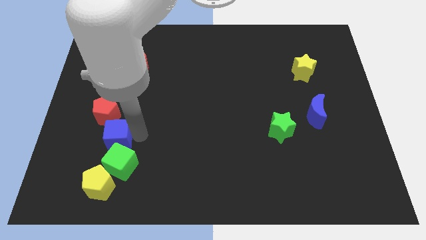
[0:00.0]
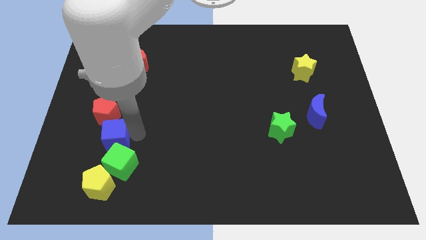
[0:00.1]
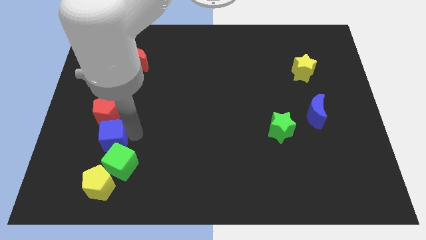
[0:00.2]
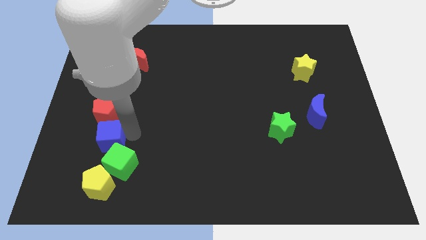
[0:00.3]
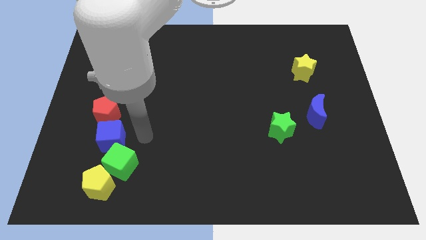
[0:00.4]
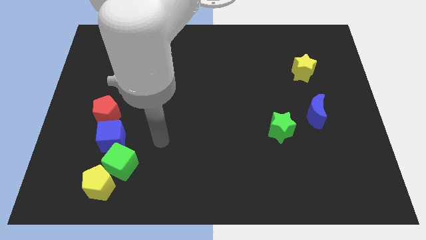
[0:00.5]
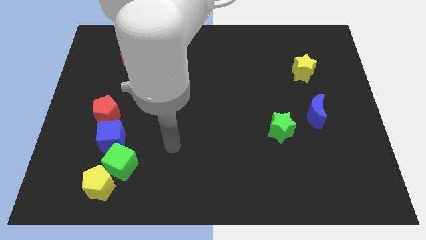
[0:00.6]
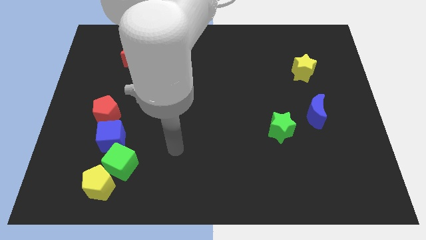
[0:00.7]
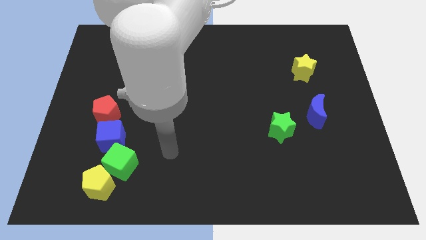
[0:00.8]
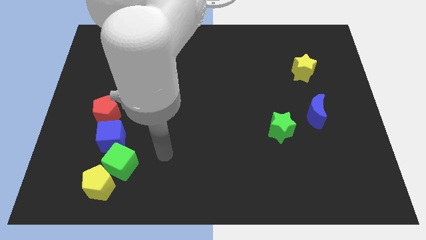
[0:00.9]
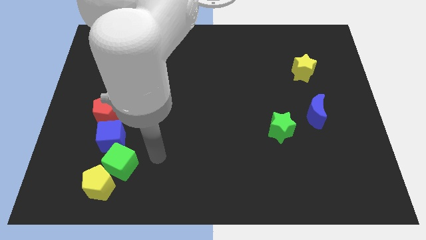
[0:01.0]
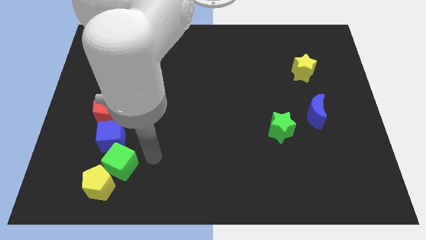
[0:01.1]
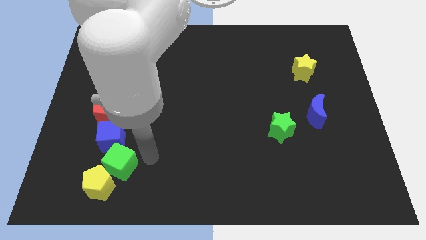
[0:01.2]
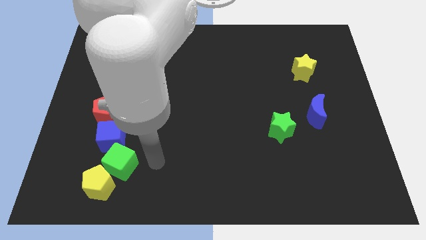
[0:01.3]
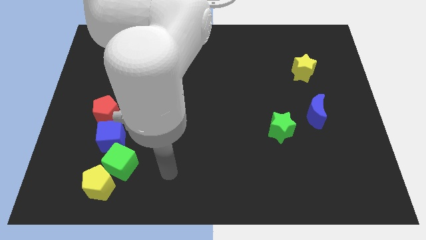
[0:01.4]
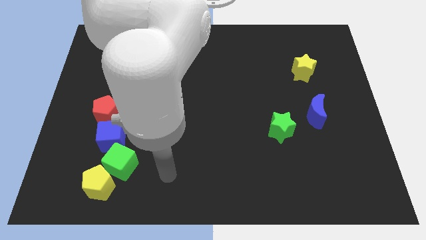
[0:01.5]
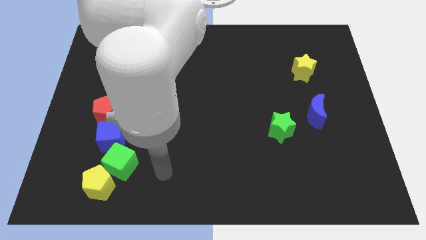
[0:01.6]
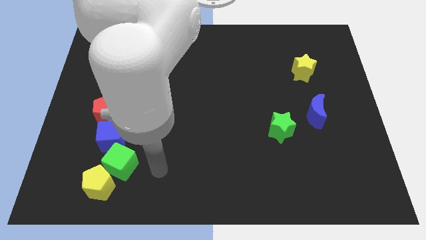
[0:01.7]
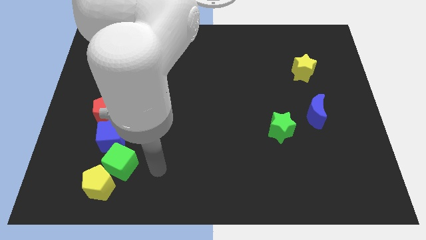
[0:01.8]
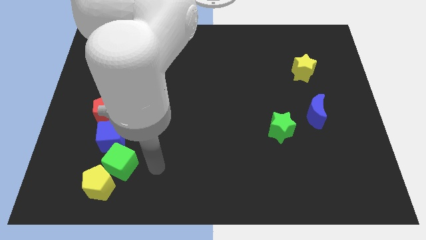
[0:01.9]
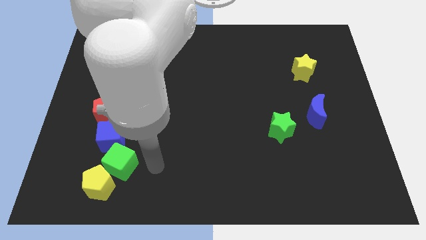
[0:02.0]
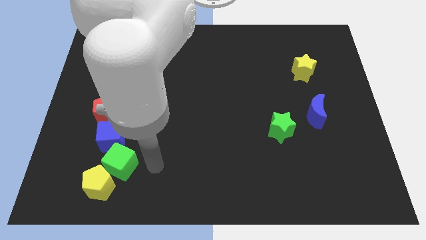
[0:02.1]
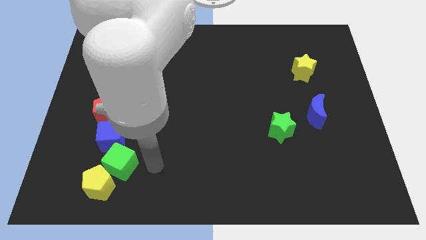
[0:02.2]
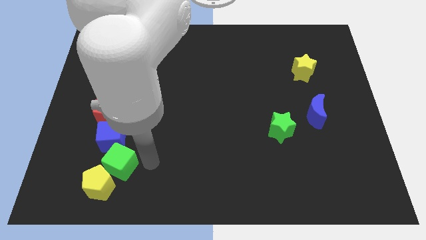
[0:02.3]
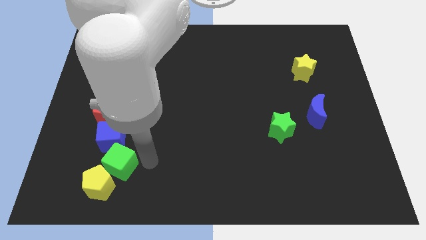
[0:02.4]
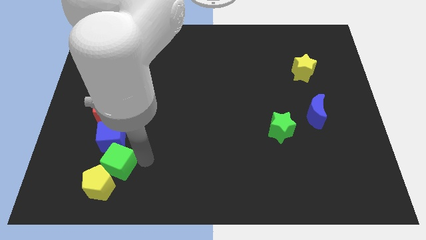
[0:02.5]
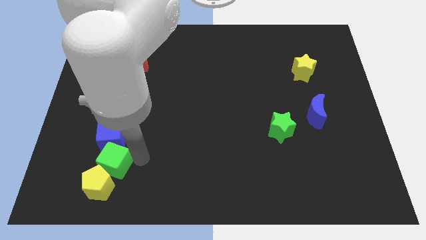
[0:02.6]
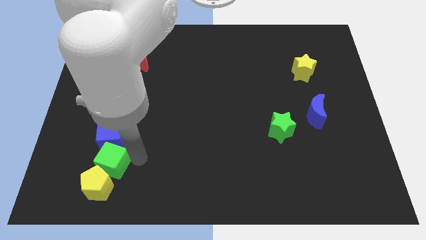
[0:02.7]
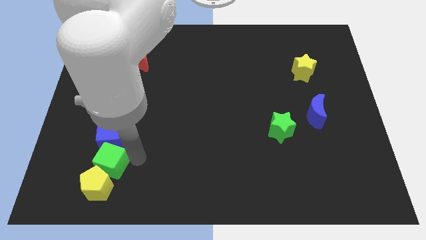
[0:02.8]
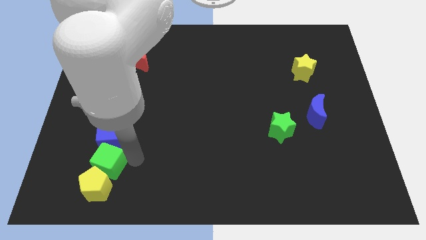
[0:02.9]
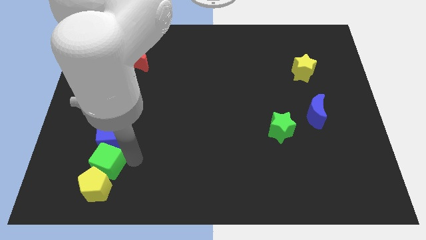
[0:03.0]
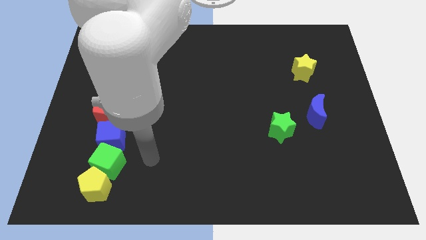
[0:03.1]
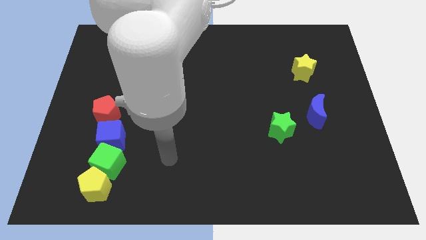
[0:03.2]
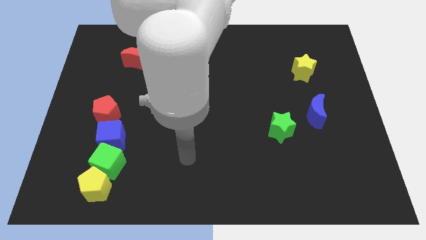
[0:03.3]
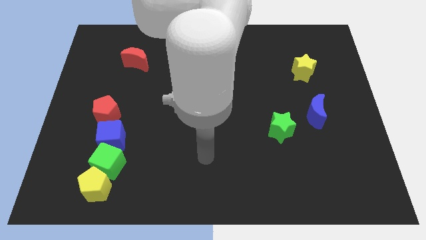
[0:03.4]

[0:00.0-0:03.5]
adjust blue cube and green cube in a vertical line

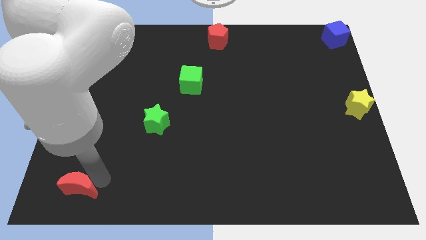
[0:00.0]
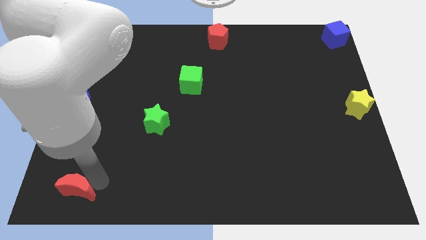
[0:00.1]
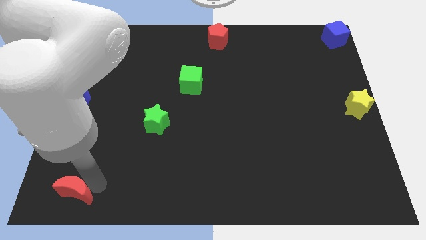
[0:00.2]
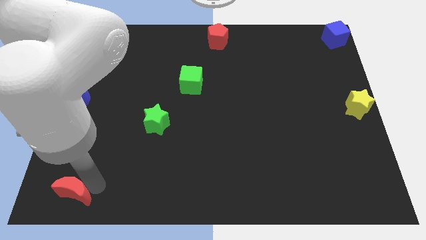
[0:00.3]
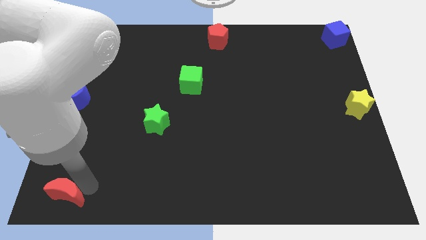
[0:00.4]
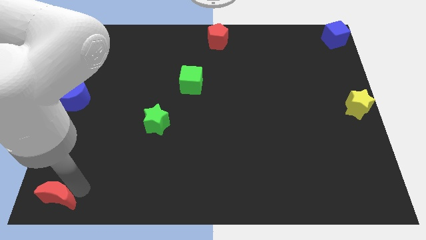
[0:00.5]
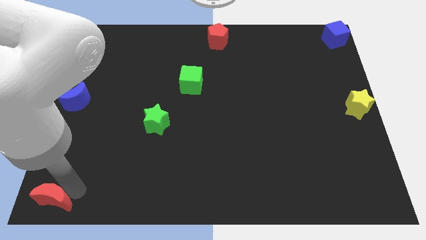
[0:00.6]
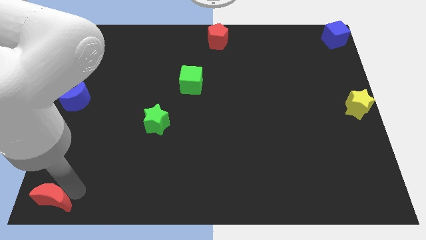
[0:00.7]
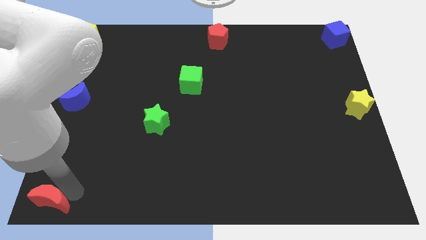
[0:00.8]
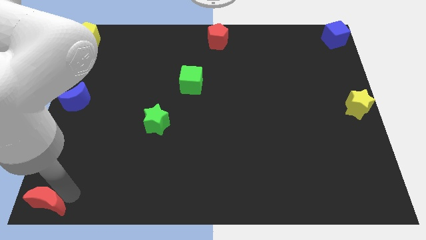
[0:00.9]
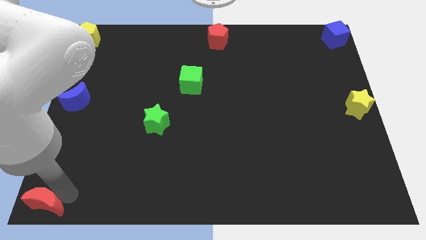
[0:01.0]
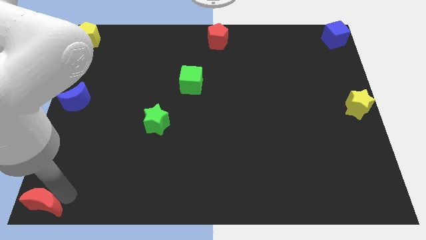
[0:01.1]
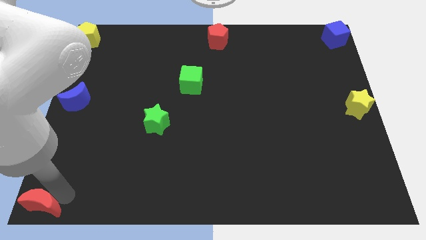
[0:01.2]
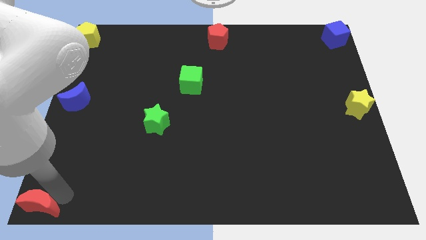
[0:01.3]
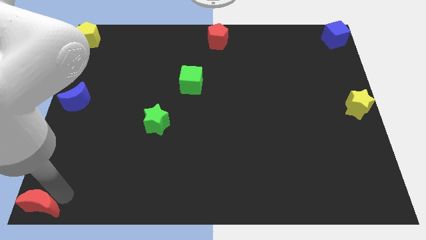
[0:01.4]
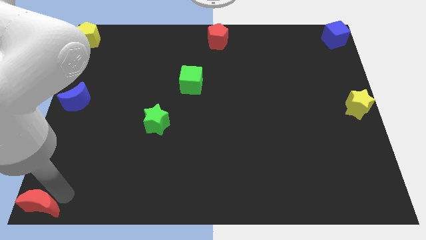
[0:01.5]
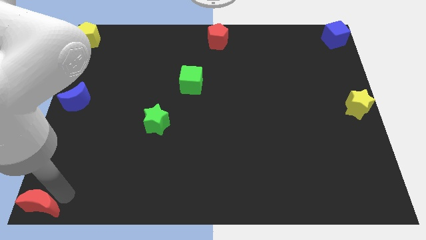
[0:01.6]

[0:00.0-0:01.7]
move the red crescent to the bottom left corner

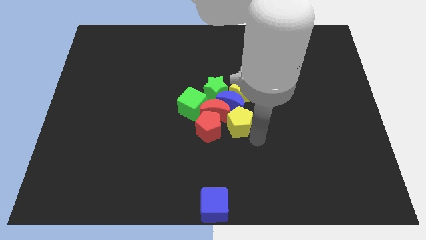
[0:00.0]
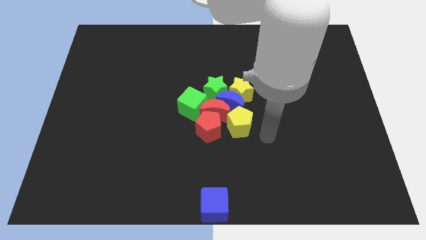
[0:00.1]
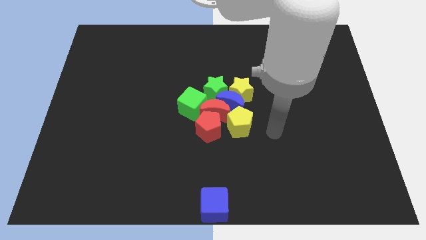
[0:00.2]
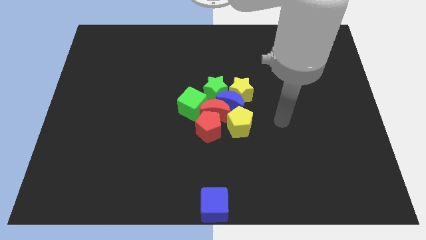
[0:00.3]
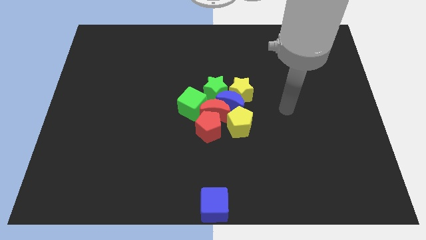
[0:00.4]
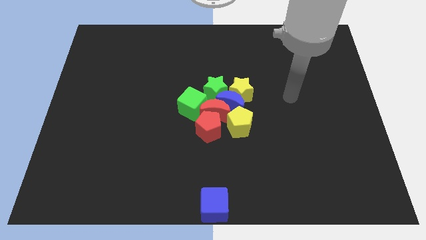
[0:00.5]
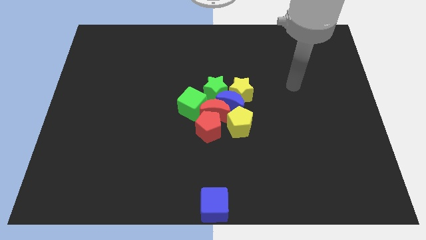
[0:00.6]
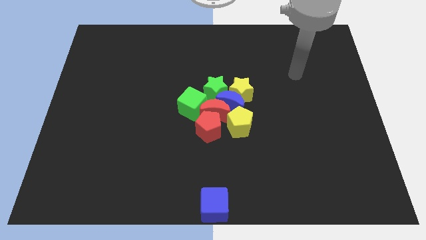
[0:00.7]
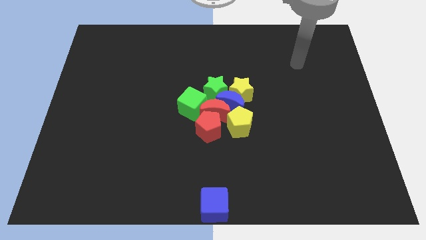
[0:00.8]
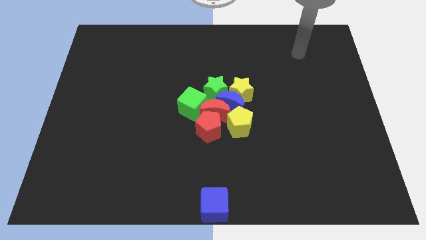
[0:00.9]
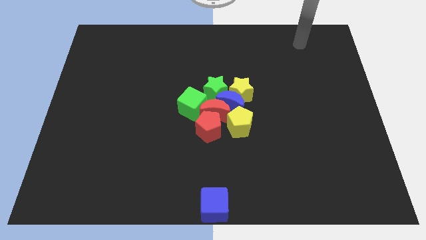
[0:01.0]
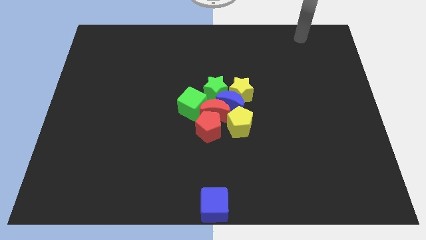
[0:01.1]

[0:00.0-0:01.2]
move your arm away from the group of blocks

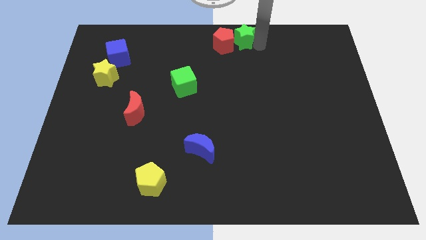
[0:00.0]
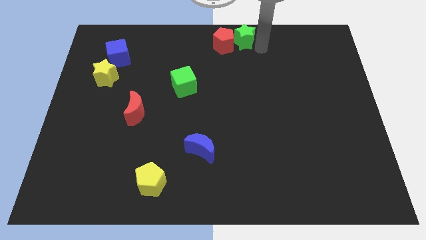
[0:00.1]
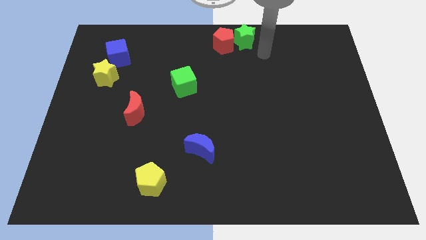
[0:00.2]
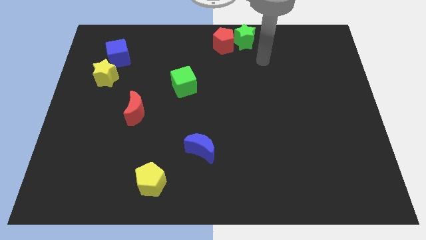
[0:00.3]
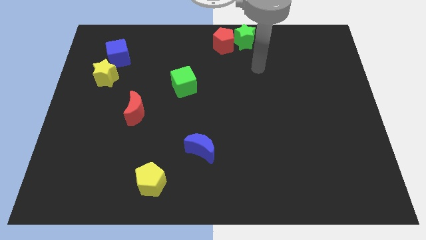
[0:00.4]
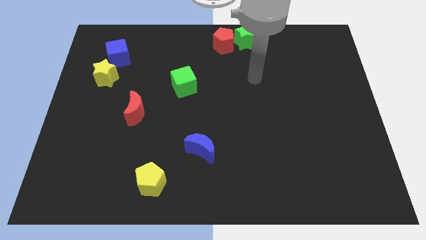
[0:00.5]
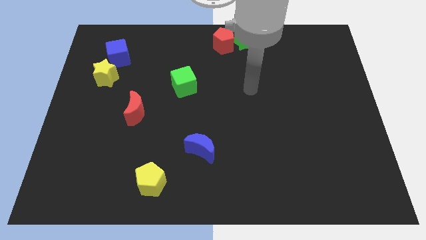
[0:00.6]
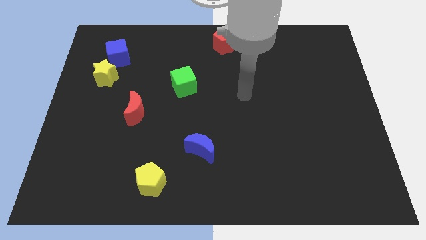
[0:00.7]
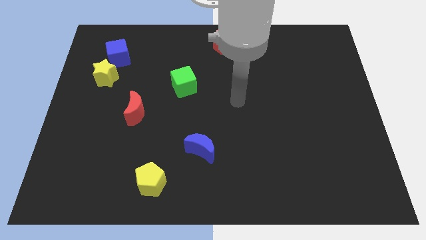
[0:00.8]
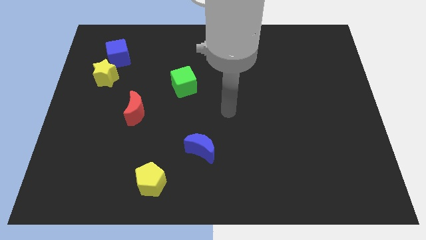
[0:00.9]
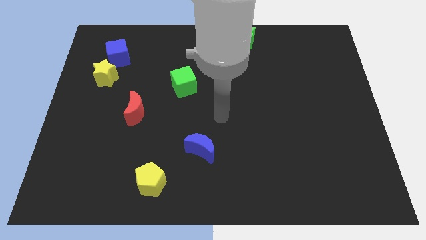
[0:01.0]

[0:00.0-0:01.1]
move the arm away from the green star

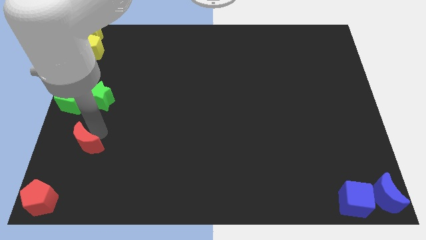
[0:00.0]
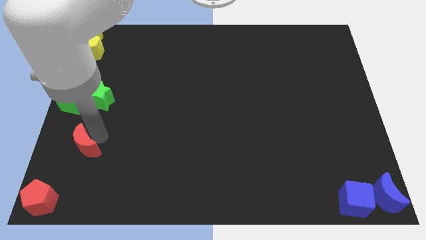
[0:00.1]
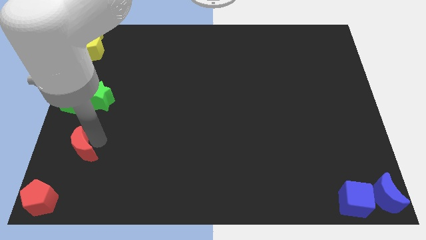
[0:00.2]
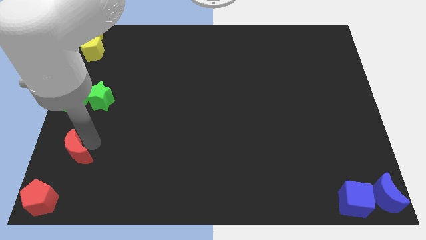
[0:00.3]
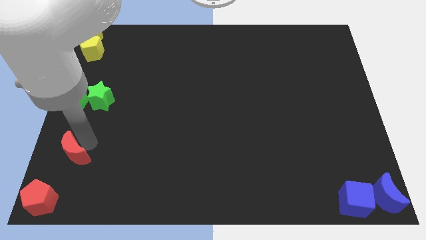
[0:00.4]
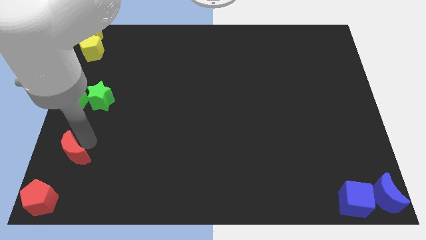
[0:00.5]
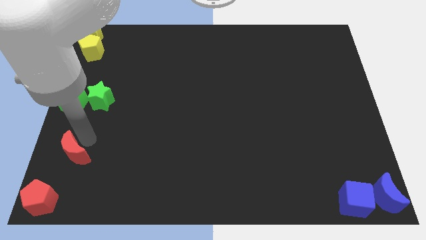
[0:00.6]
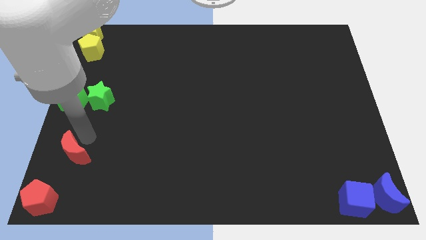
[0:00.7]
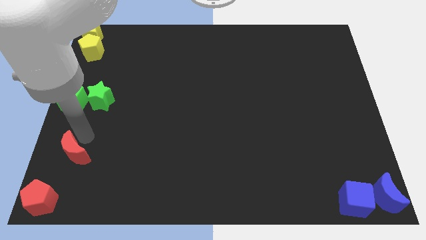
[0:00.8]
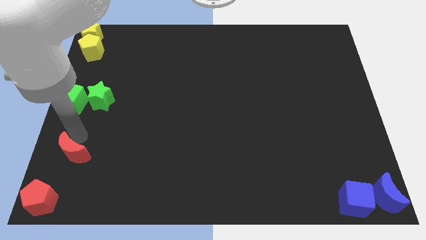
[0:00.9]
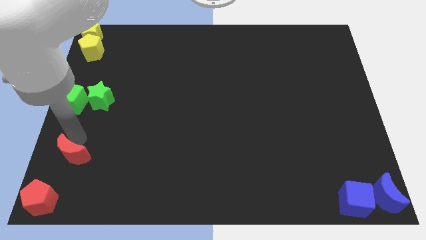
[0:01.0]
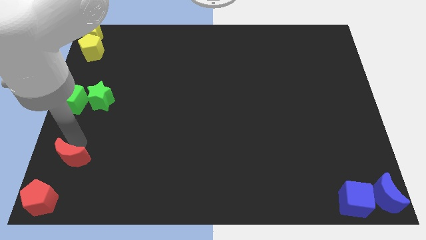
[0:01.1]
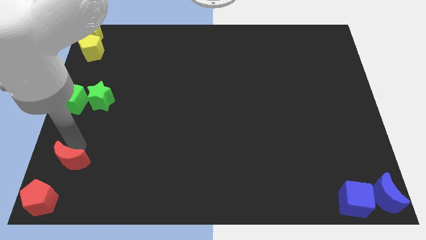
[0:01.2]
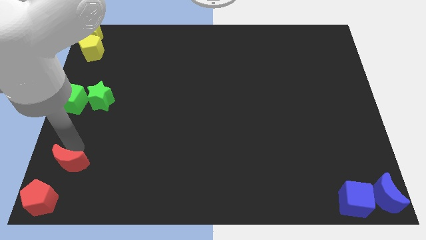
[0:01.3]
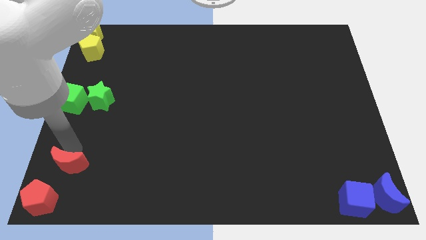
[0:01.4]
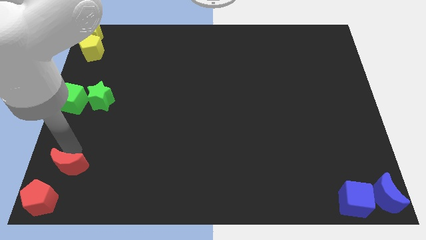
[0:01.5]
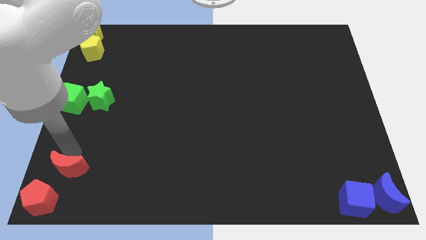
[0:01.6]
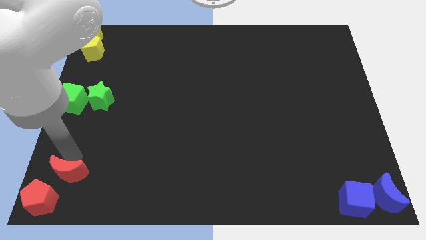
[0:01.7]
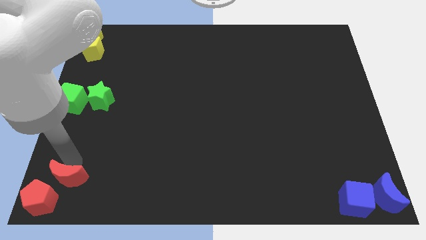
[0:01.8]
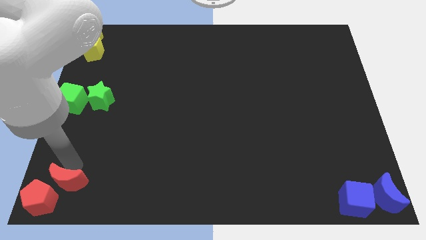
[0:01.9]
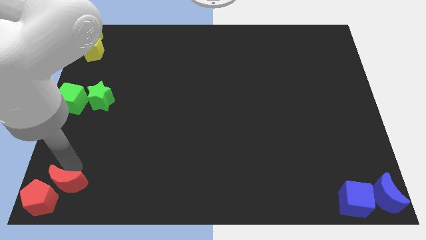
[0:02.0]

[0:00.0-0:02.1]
place the red moon to the right of red pentagon
